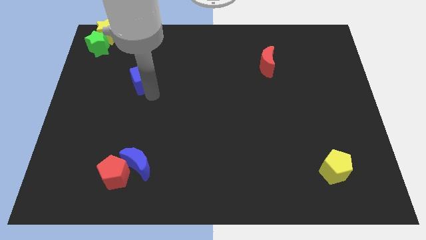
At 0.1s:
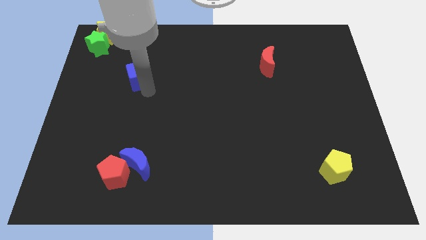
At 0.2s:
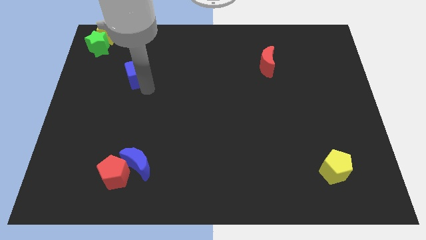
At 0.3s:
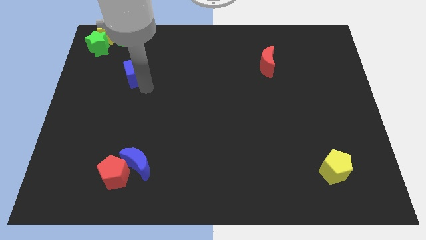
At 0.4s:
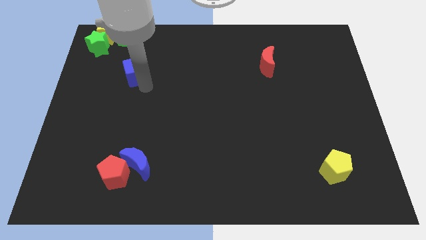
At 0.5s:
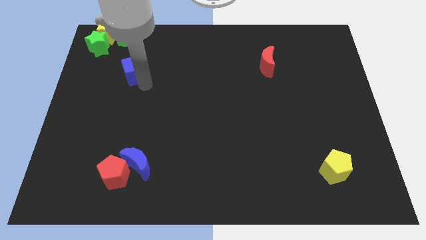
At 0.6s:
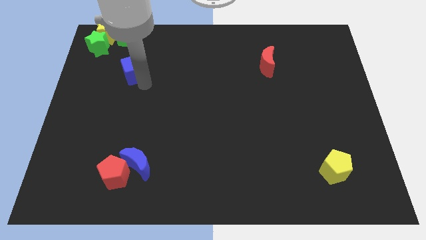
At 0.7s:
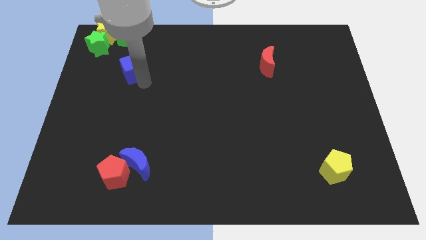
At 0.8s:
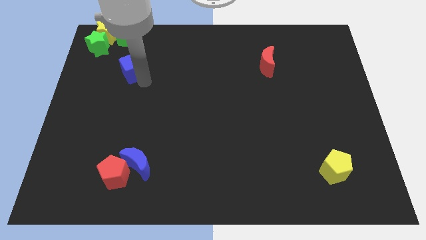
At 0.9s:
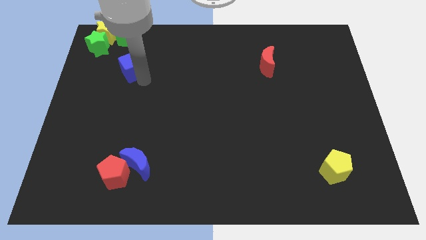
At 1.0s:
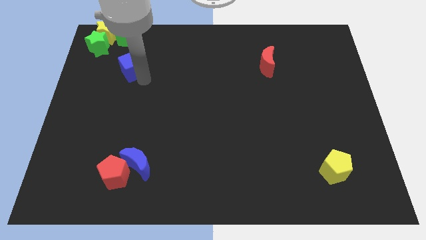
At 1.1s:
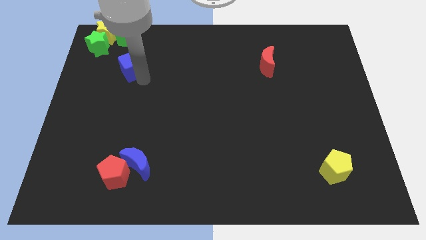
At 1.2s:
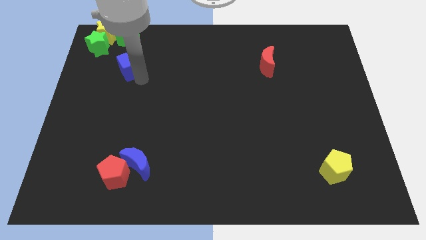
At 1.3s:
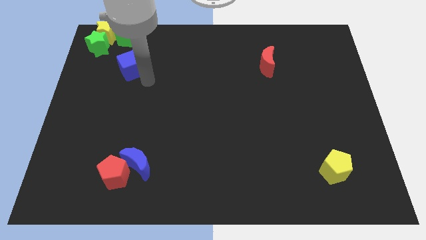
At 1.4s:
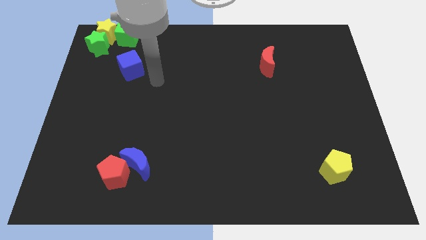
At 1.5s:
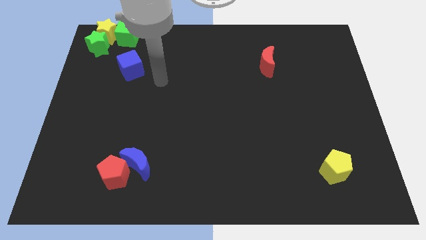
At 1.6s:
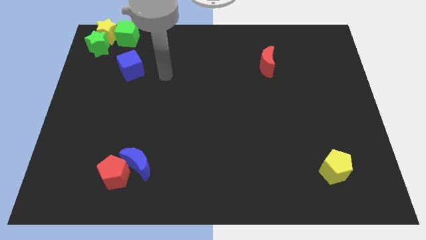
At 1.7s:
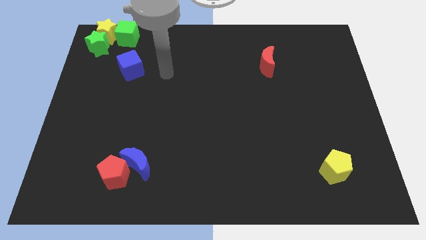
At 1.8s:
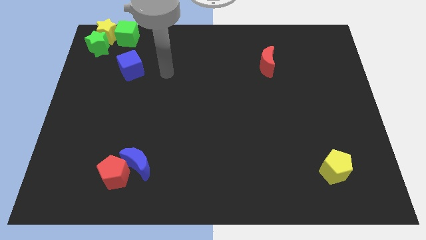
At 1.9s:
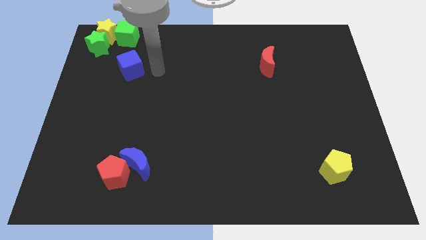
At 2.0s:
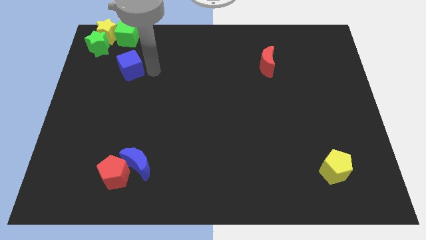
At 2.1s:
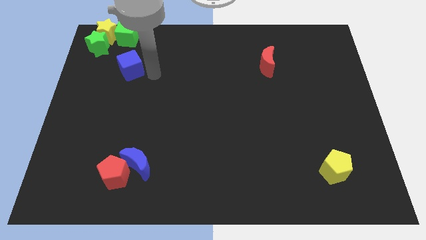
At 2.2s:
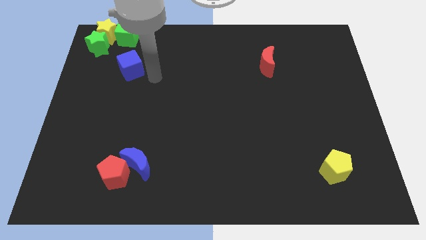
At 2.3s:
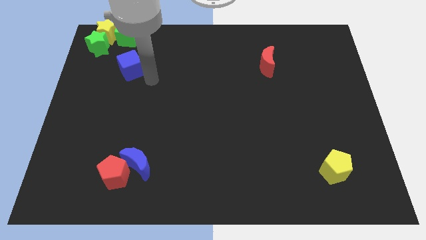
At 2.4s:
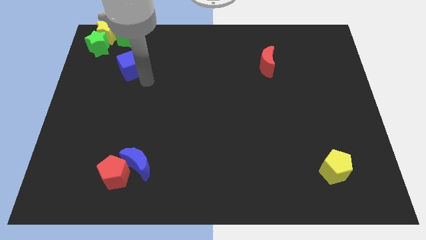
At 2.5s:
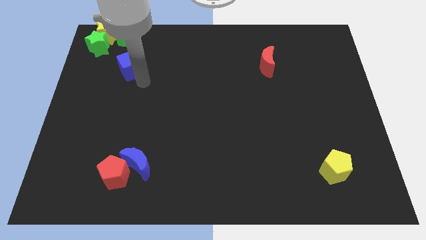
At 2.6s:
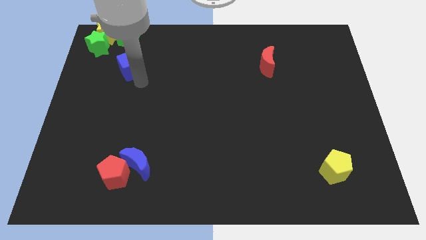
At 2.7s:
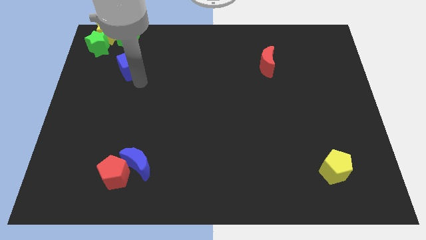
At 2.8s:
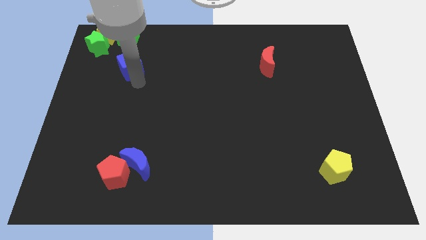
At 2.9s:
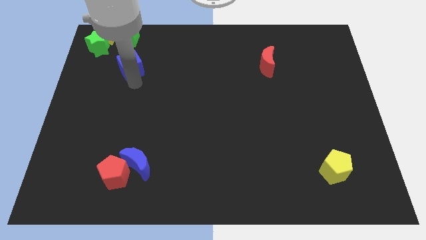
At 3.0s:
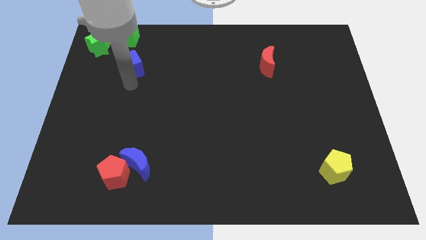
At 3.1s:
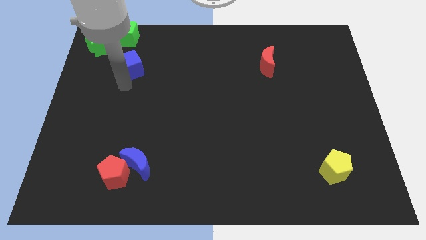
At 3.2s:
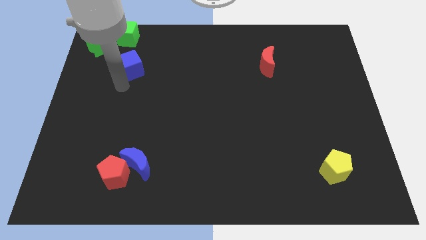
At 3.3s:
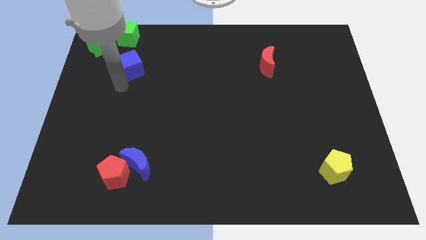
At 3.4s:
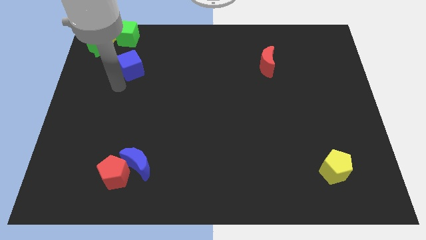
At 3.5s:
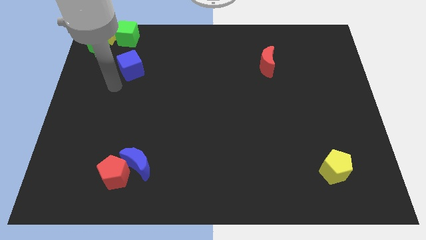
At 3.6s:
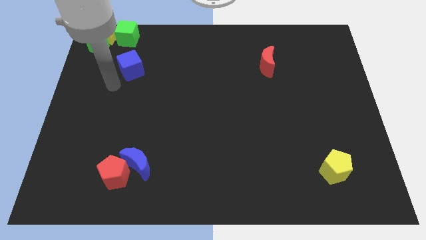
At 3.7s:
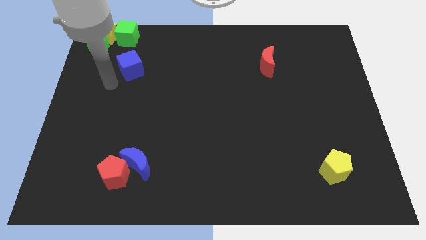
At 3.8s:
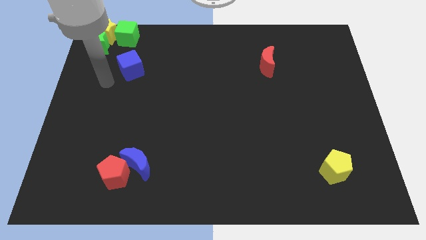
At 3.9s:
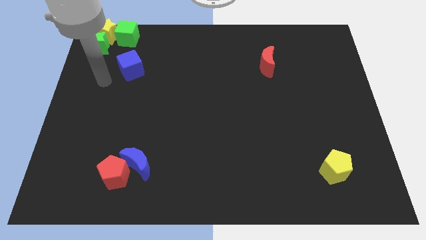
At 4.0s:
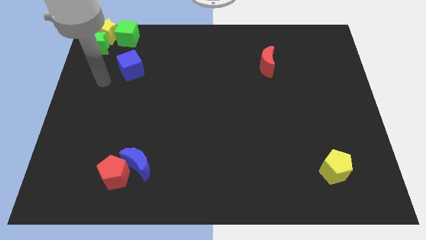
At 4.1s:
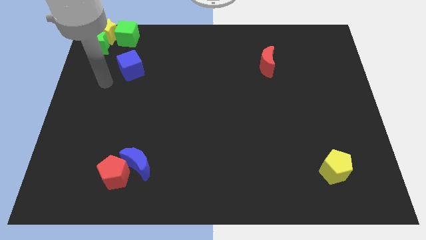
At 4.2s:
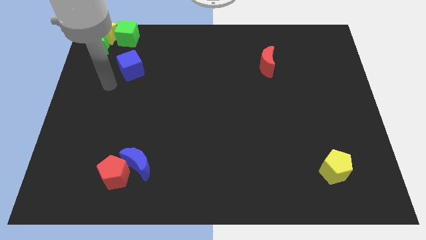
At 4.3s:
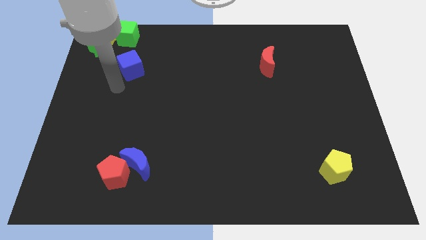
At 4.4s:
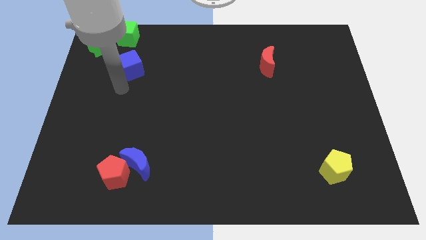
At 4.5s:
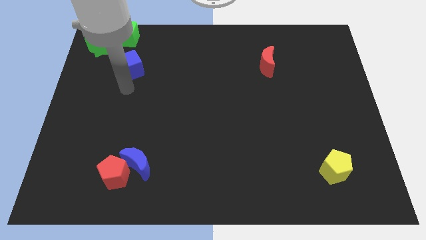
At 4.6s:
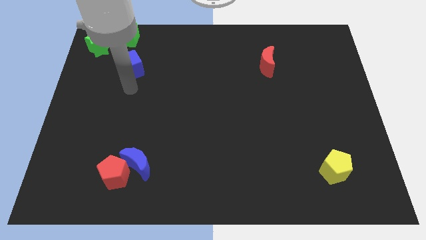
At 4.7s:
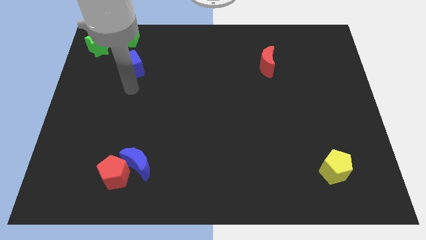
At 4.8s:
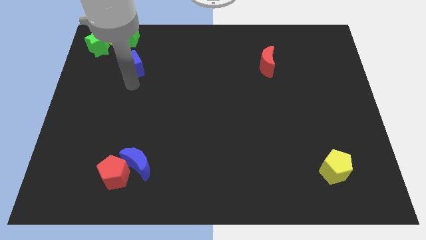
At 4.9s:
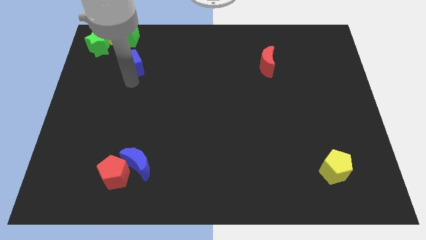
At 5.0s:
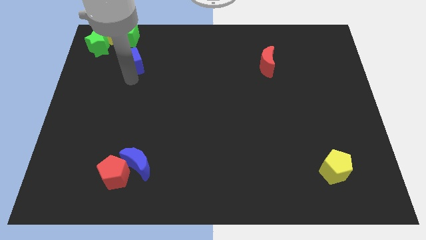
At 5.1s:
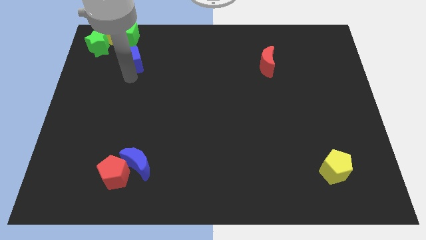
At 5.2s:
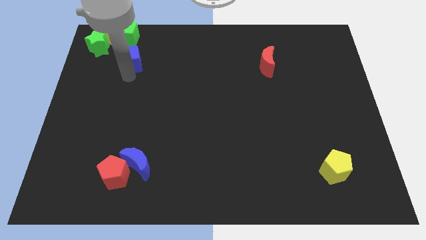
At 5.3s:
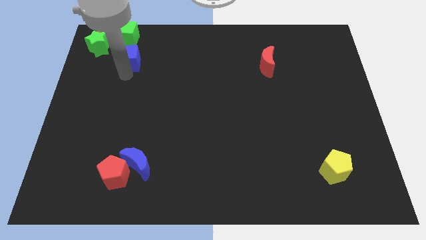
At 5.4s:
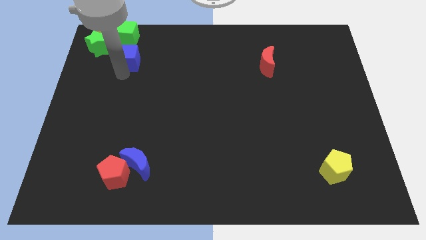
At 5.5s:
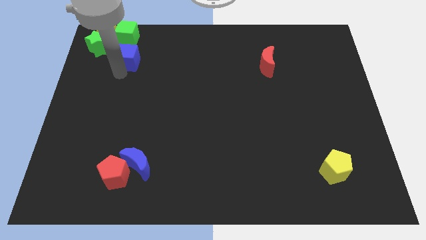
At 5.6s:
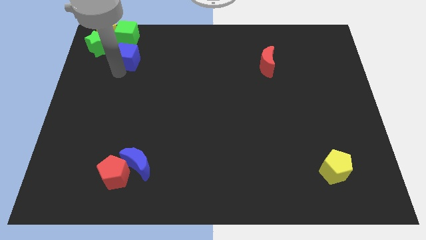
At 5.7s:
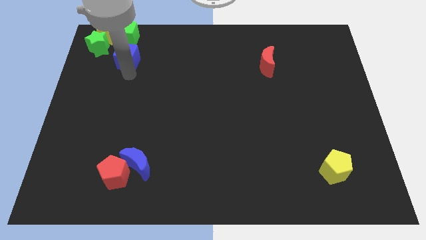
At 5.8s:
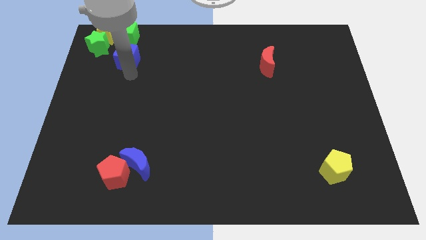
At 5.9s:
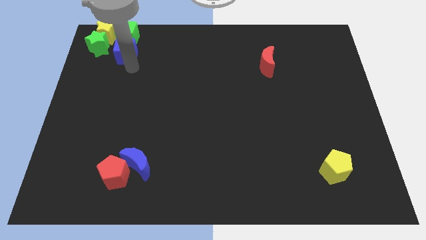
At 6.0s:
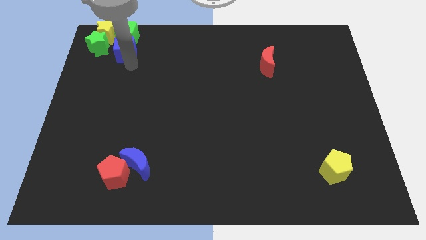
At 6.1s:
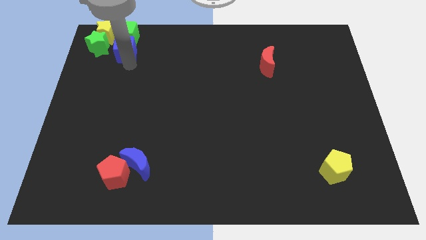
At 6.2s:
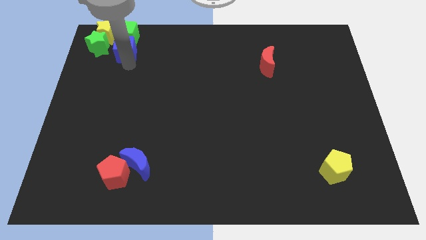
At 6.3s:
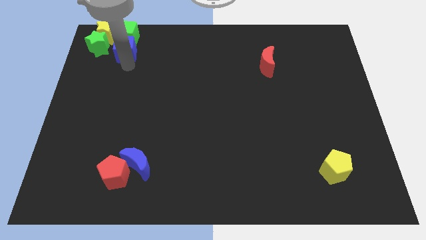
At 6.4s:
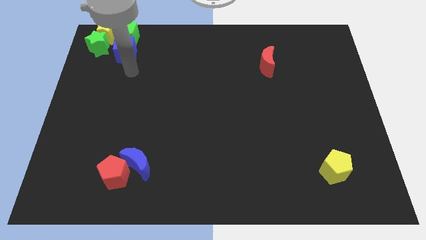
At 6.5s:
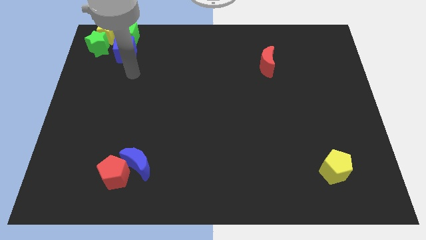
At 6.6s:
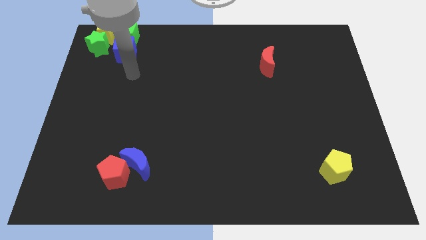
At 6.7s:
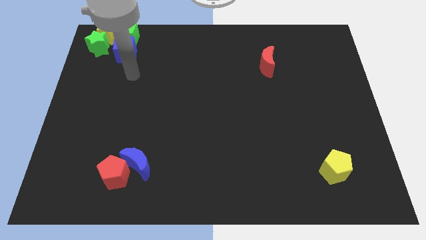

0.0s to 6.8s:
place the blue cube below the green cube

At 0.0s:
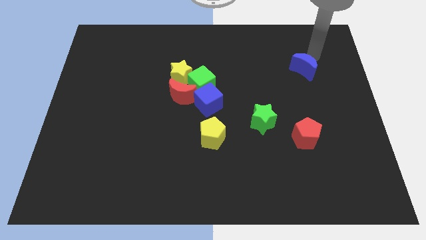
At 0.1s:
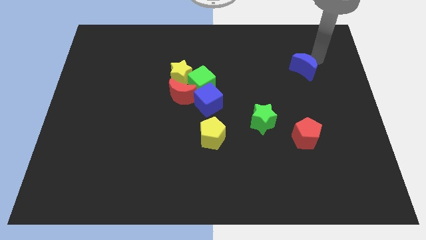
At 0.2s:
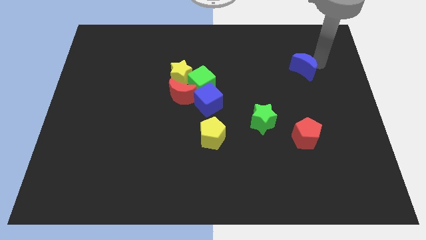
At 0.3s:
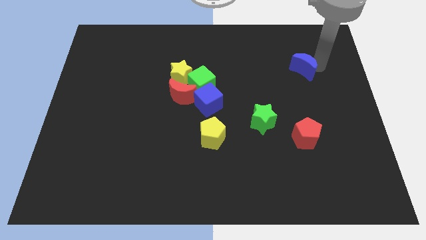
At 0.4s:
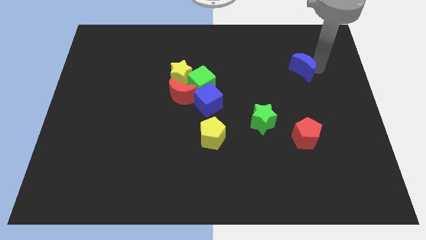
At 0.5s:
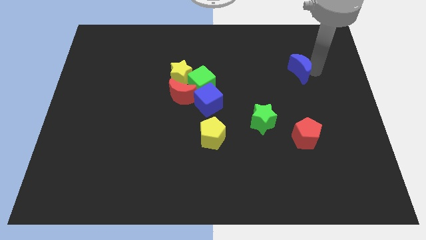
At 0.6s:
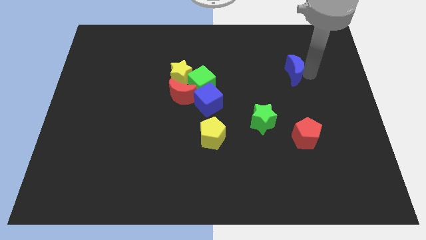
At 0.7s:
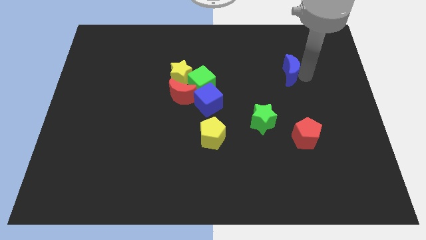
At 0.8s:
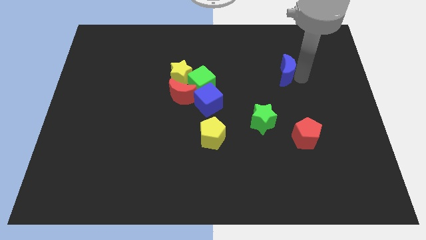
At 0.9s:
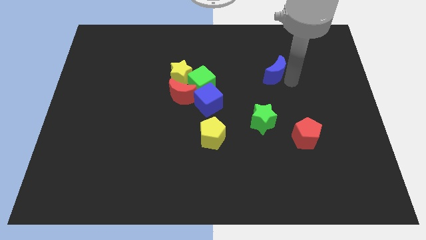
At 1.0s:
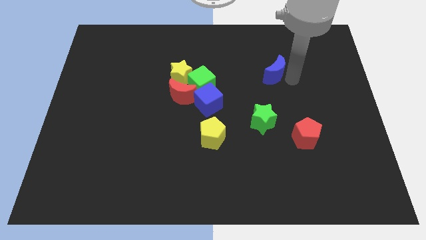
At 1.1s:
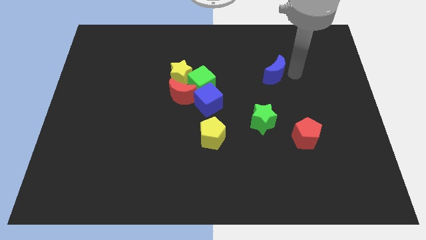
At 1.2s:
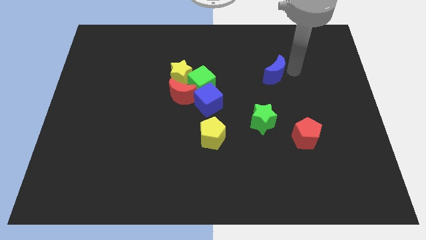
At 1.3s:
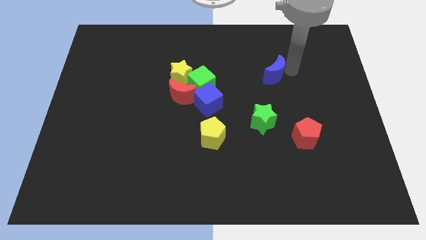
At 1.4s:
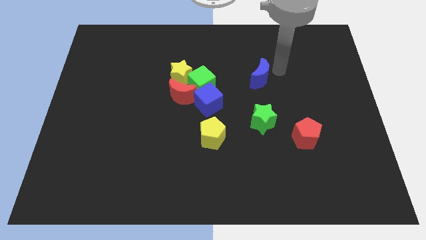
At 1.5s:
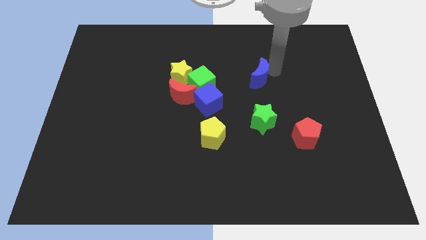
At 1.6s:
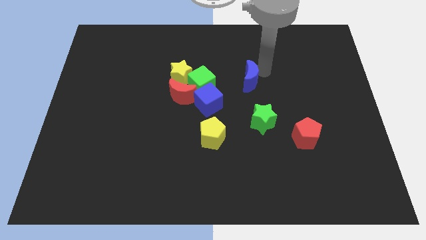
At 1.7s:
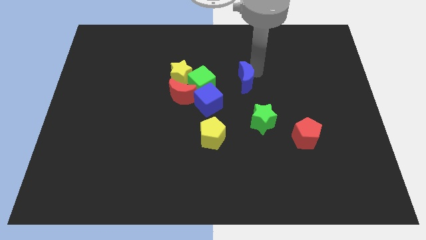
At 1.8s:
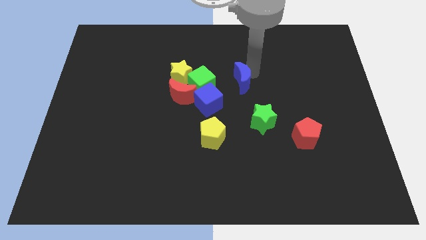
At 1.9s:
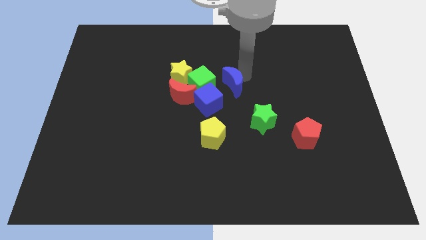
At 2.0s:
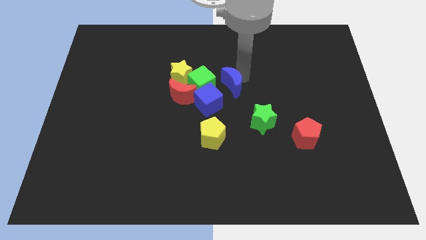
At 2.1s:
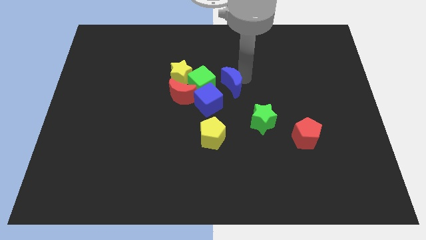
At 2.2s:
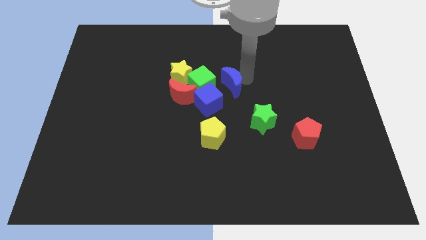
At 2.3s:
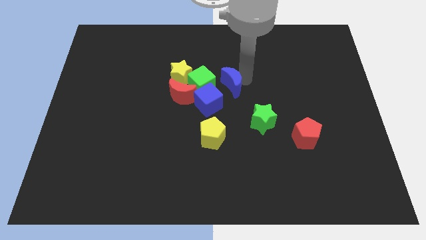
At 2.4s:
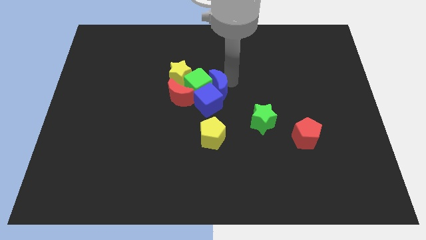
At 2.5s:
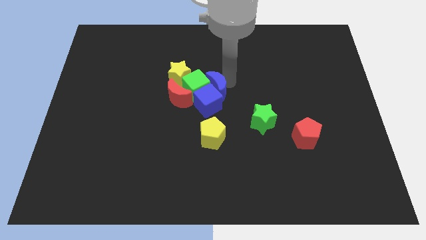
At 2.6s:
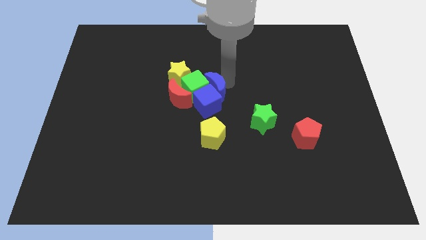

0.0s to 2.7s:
push the blue moon into a group of blocks
